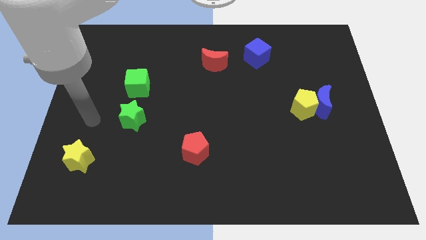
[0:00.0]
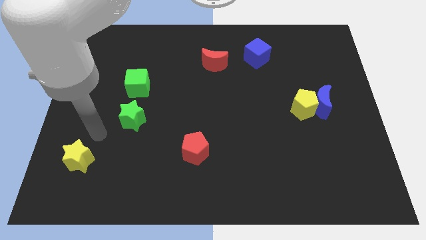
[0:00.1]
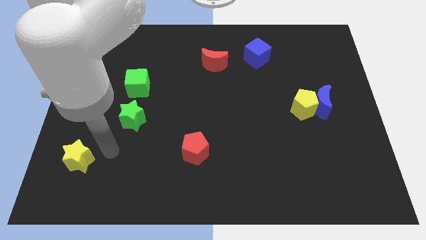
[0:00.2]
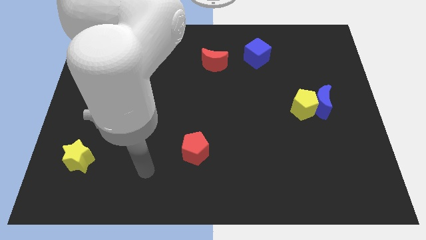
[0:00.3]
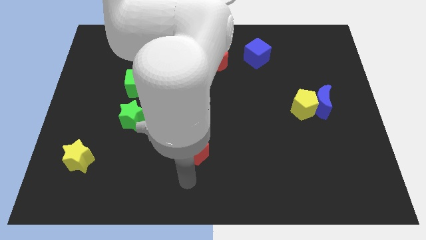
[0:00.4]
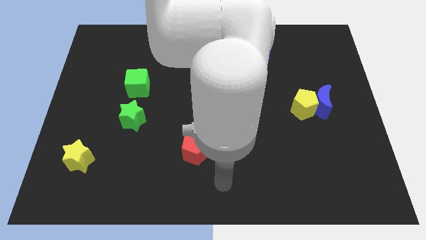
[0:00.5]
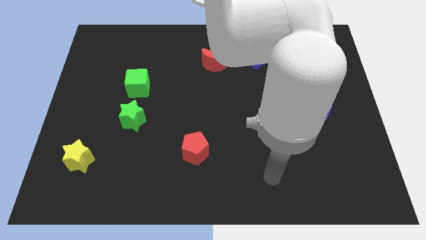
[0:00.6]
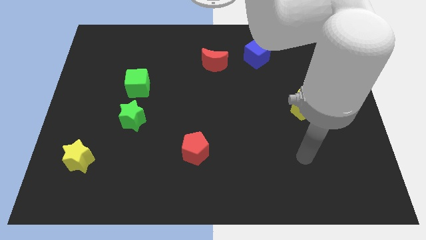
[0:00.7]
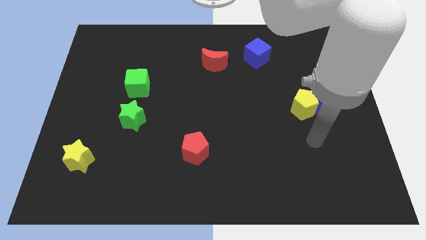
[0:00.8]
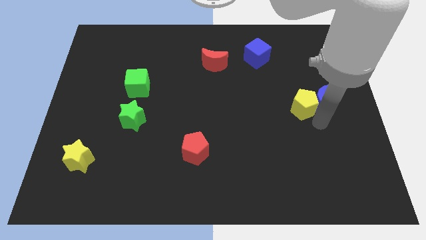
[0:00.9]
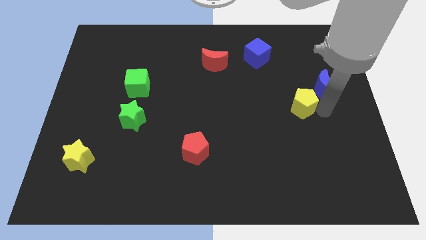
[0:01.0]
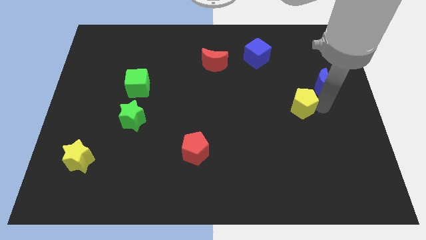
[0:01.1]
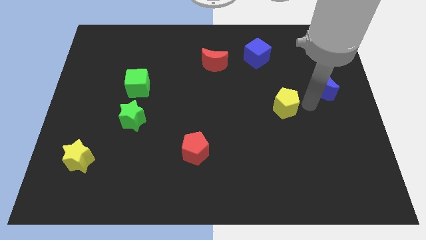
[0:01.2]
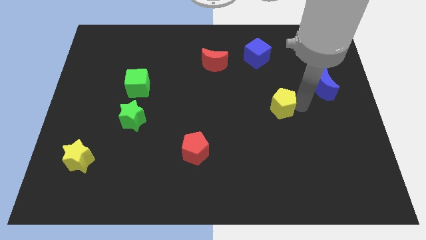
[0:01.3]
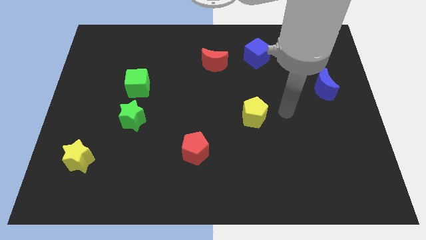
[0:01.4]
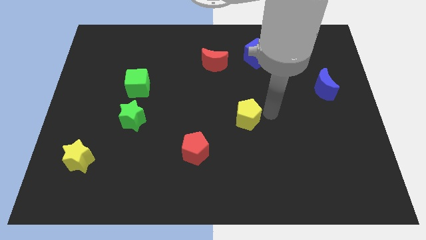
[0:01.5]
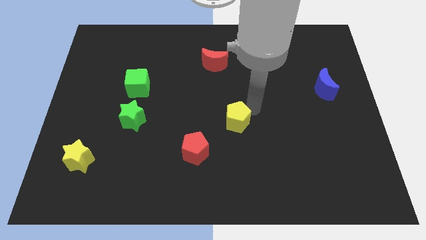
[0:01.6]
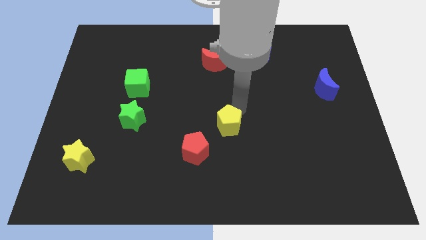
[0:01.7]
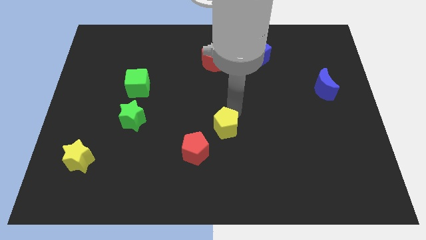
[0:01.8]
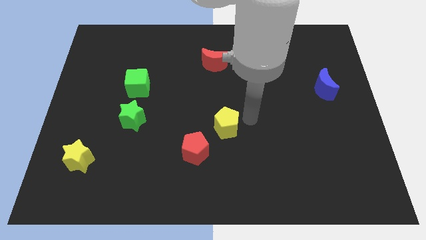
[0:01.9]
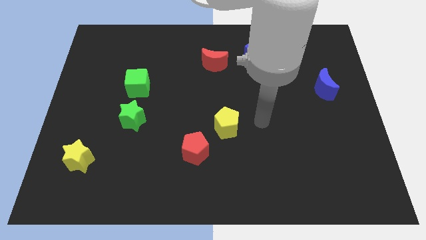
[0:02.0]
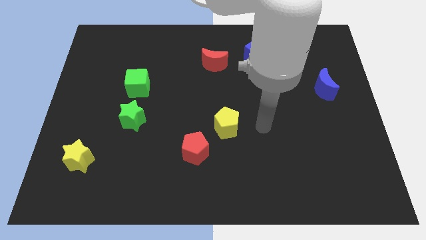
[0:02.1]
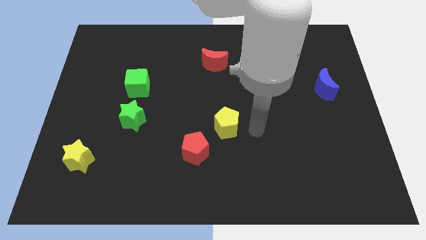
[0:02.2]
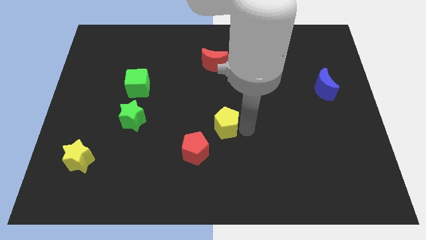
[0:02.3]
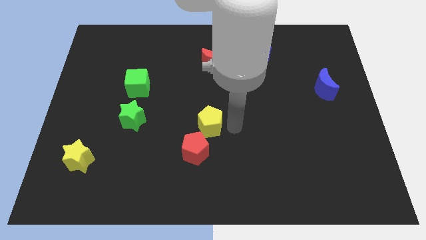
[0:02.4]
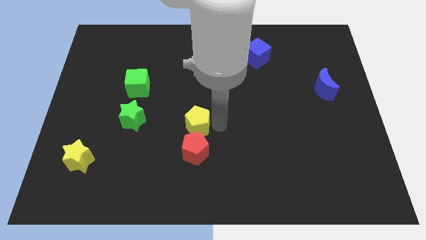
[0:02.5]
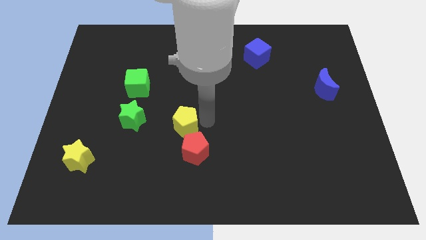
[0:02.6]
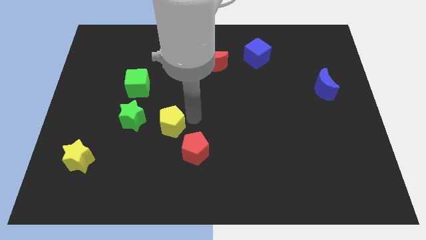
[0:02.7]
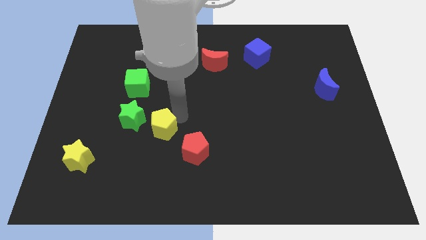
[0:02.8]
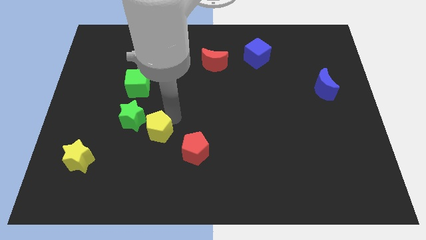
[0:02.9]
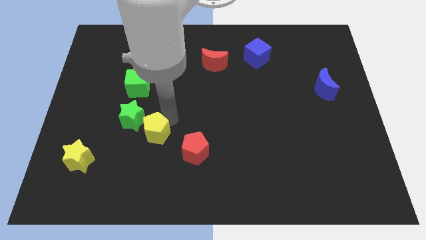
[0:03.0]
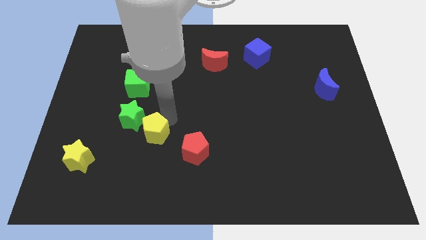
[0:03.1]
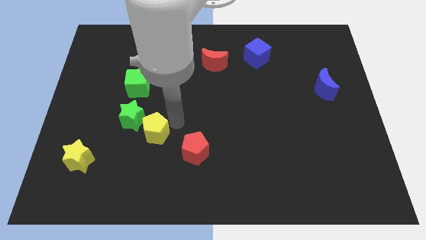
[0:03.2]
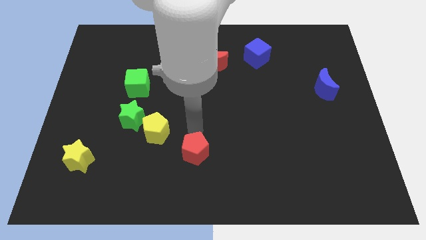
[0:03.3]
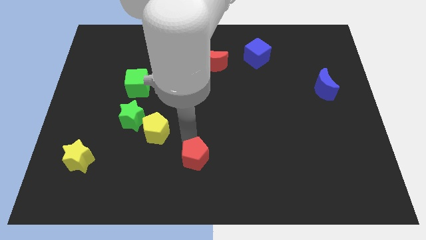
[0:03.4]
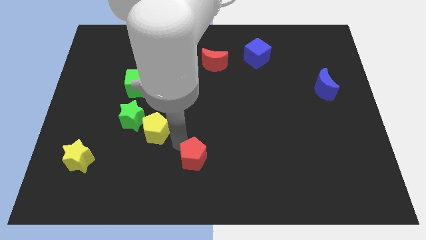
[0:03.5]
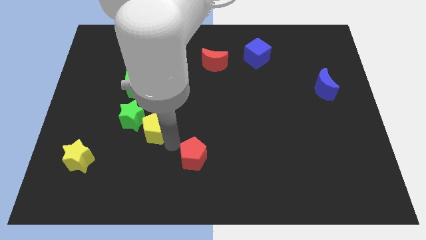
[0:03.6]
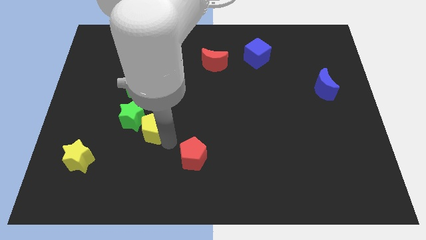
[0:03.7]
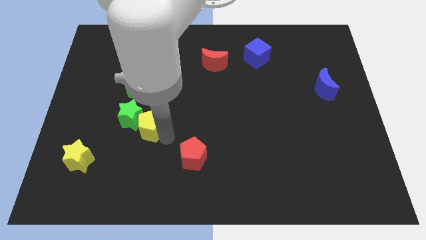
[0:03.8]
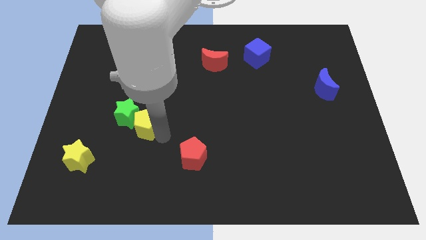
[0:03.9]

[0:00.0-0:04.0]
slide the yellow pentagon towards the green star

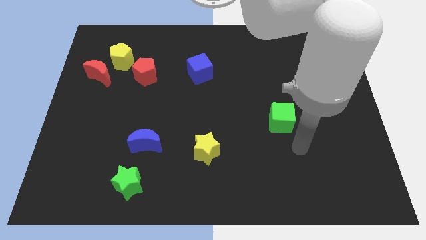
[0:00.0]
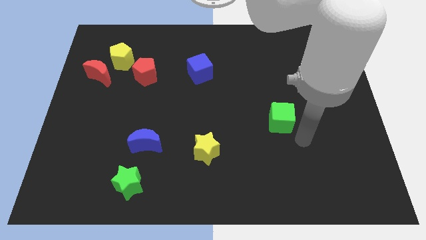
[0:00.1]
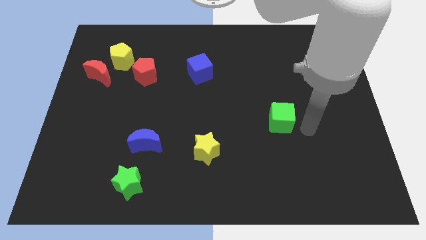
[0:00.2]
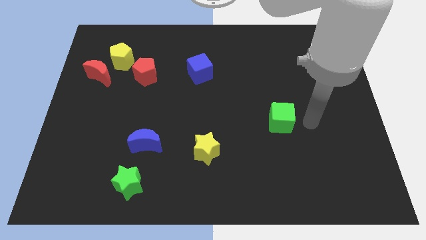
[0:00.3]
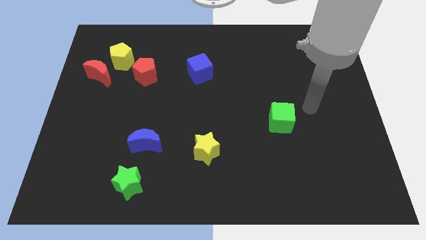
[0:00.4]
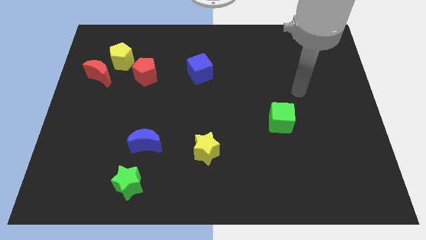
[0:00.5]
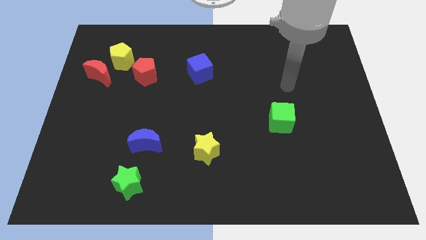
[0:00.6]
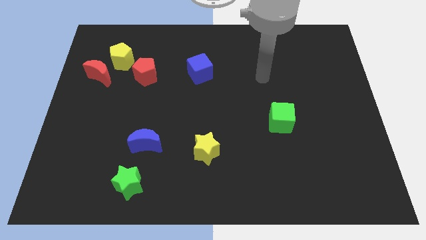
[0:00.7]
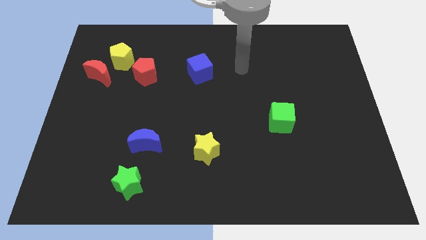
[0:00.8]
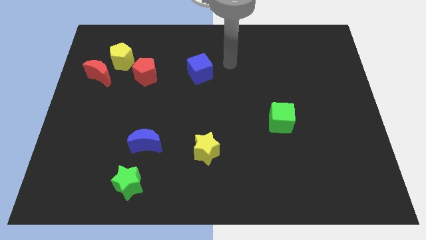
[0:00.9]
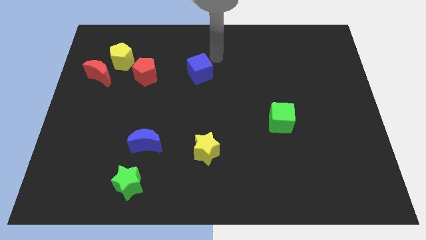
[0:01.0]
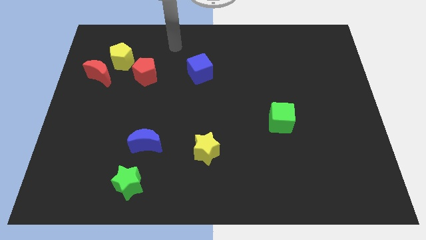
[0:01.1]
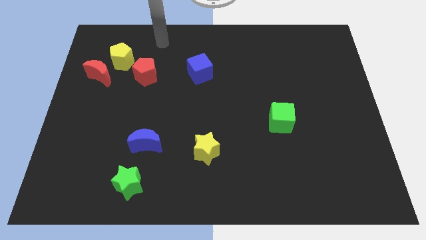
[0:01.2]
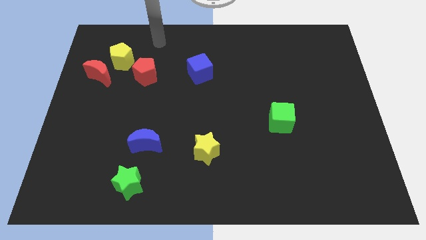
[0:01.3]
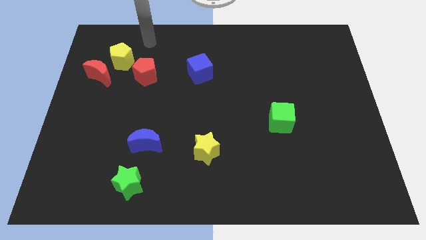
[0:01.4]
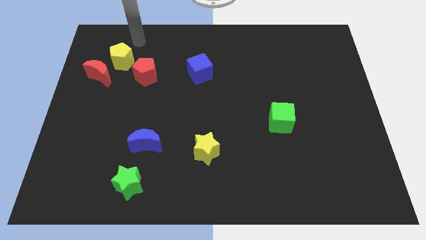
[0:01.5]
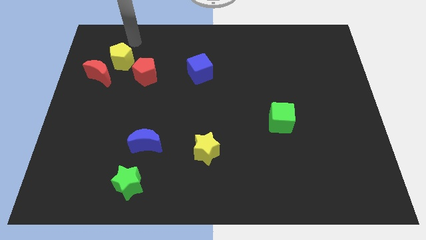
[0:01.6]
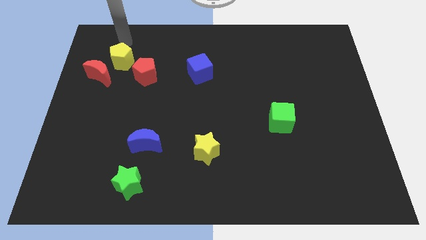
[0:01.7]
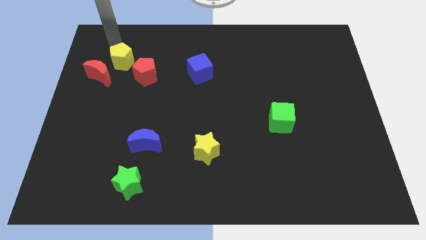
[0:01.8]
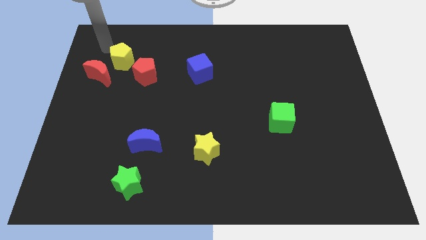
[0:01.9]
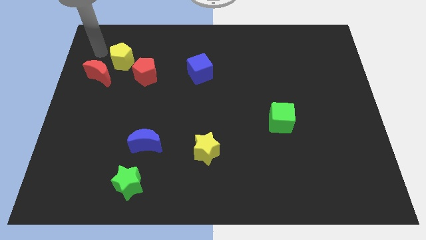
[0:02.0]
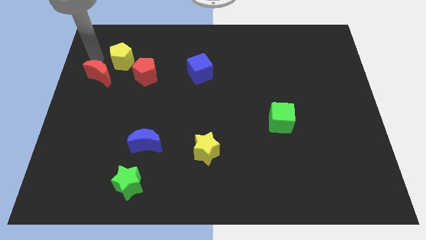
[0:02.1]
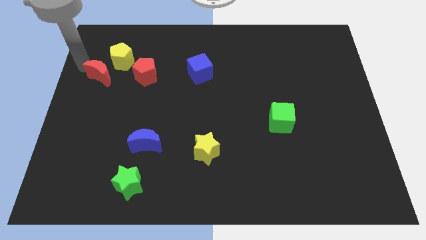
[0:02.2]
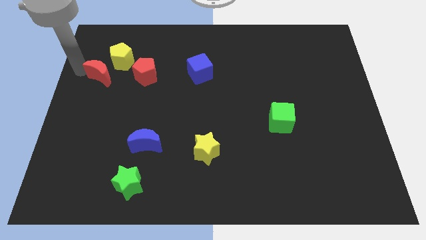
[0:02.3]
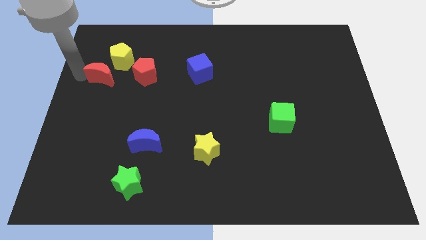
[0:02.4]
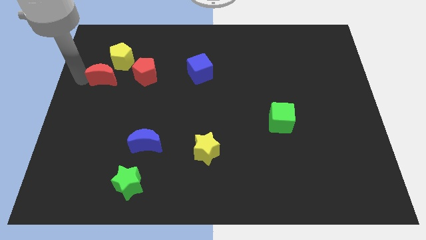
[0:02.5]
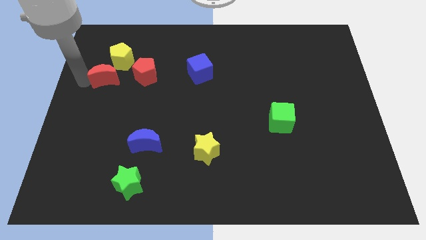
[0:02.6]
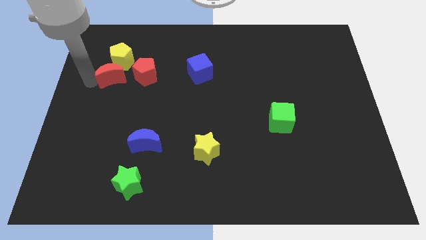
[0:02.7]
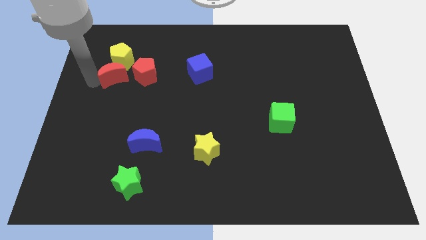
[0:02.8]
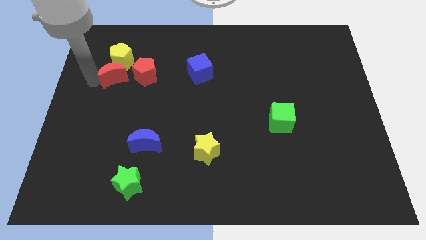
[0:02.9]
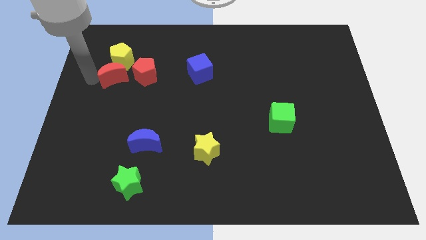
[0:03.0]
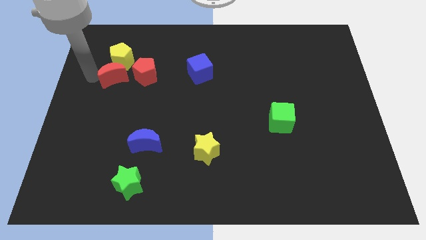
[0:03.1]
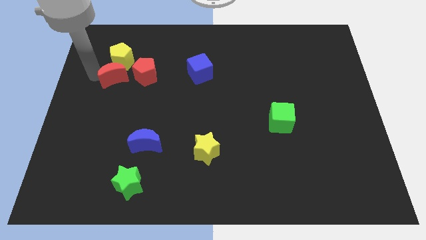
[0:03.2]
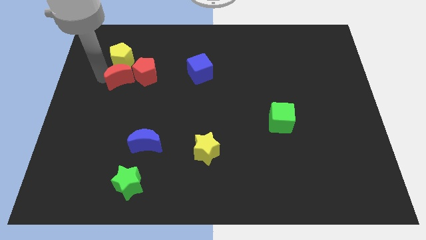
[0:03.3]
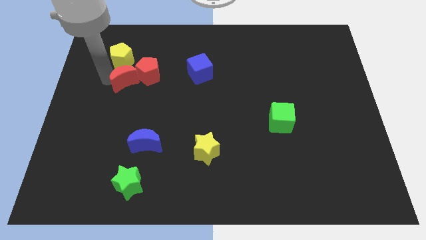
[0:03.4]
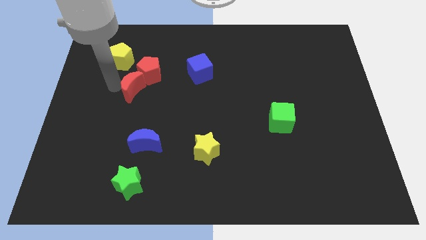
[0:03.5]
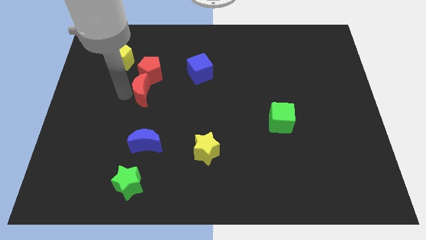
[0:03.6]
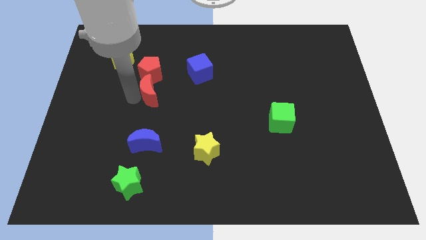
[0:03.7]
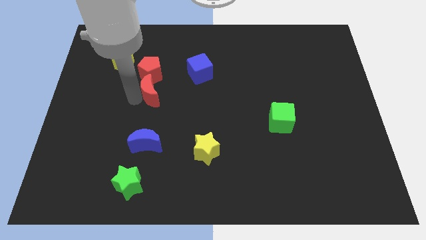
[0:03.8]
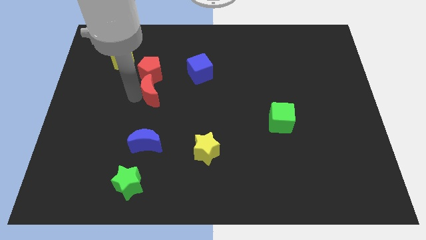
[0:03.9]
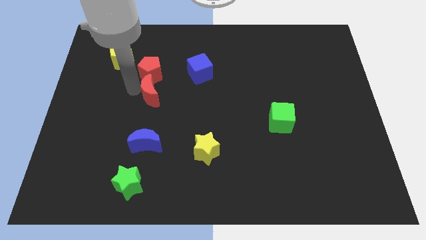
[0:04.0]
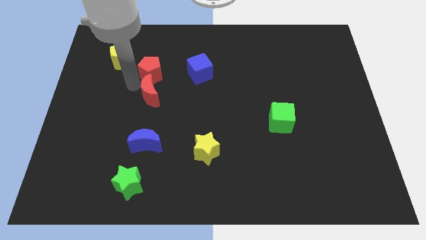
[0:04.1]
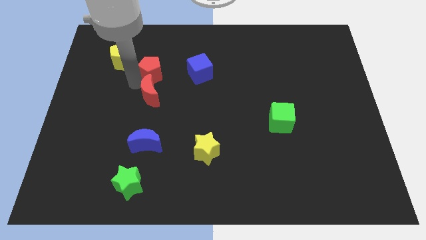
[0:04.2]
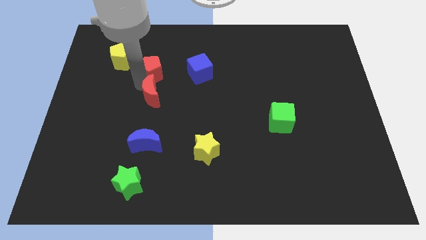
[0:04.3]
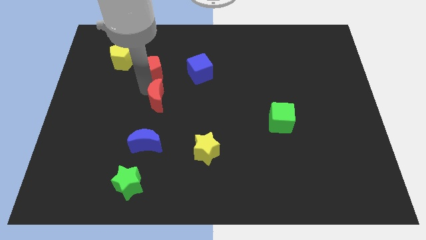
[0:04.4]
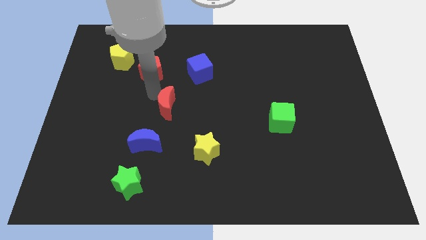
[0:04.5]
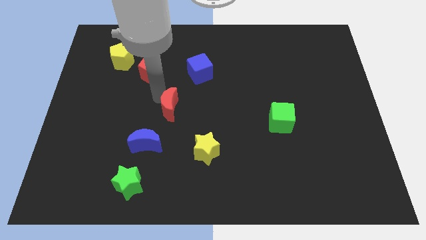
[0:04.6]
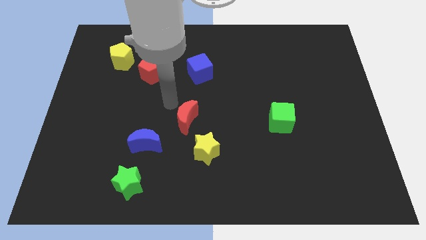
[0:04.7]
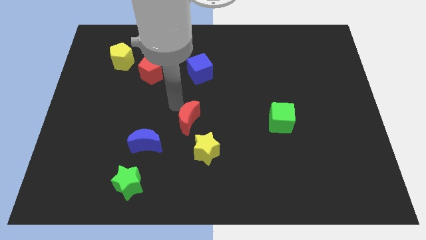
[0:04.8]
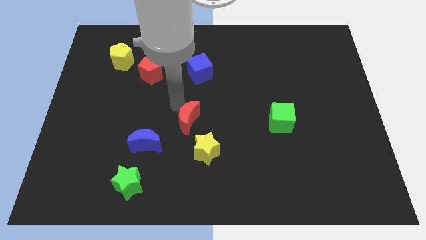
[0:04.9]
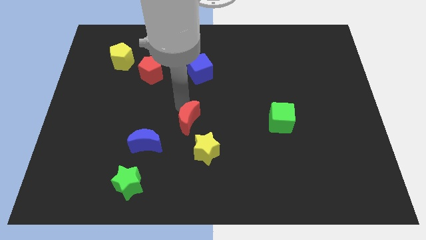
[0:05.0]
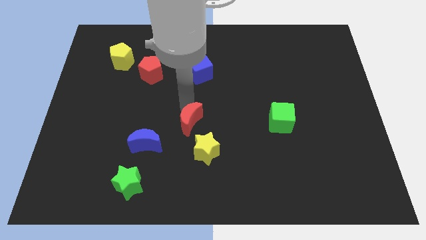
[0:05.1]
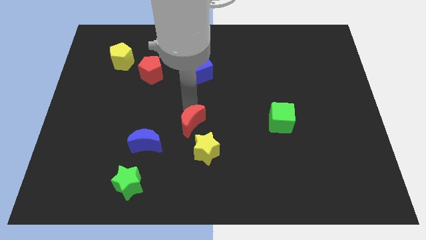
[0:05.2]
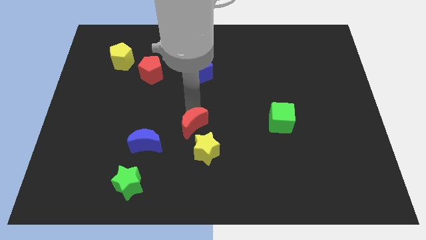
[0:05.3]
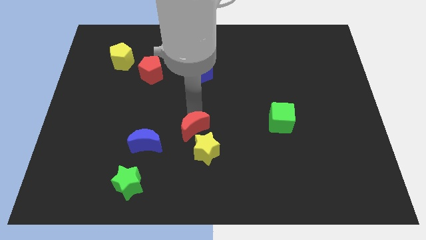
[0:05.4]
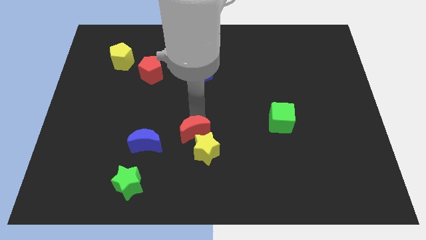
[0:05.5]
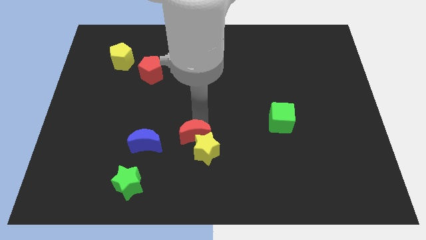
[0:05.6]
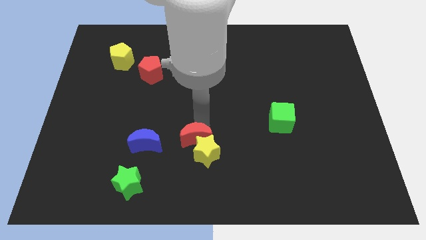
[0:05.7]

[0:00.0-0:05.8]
move the red moon to the yellow star
